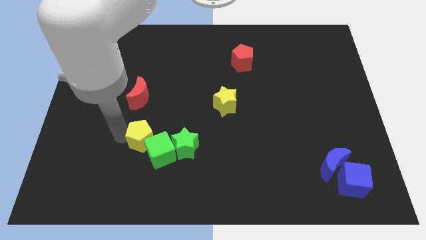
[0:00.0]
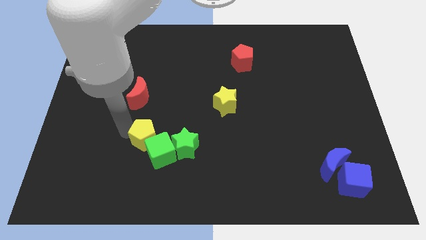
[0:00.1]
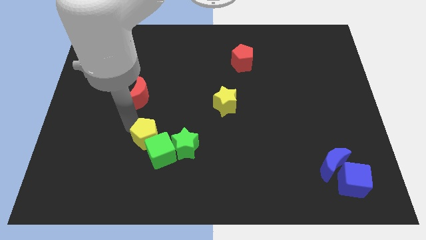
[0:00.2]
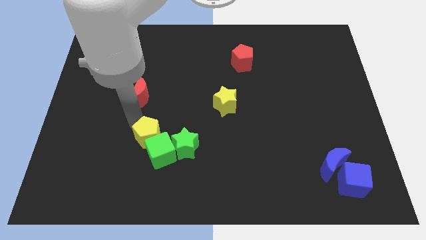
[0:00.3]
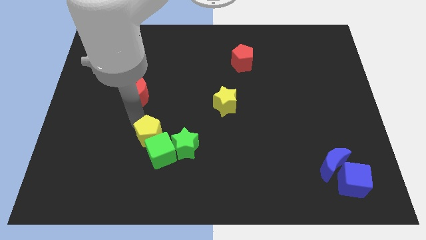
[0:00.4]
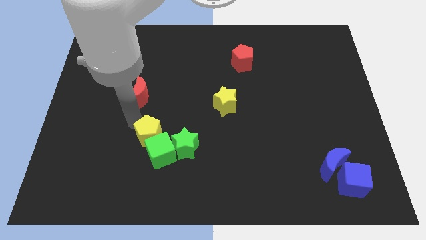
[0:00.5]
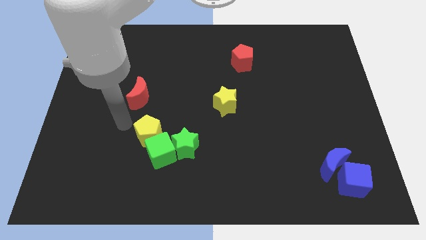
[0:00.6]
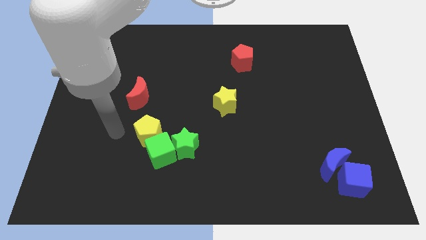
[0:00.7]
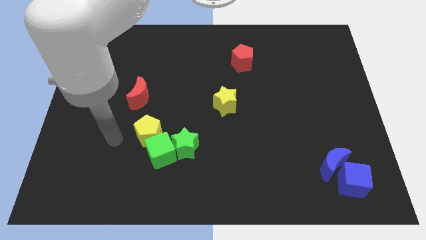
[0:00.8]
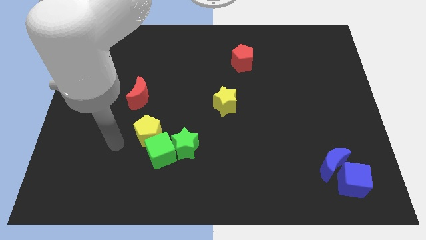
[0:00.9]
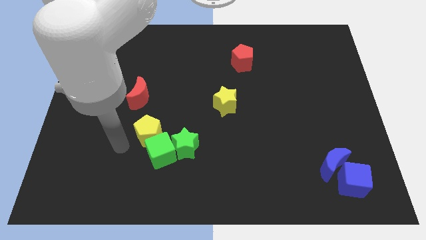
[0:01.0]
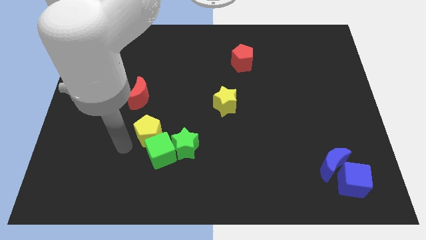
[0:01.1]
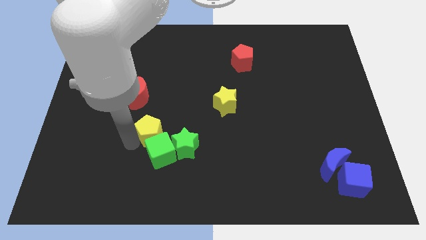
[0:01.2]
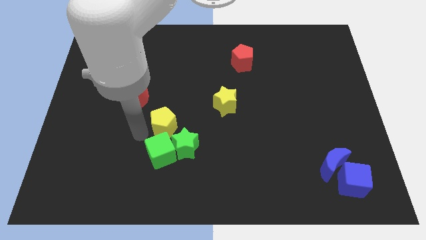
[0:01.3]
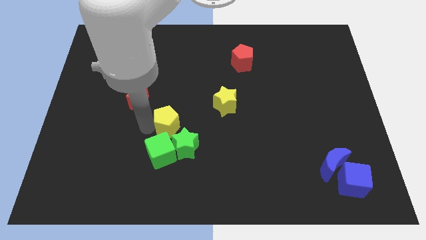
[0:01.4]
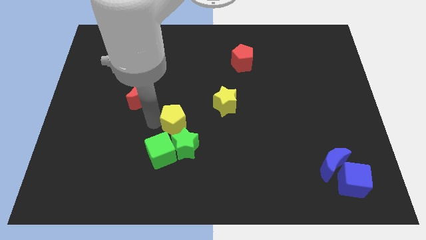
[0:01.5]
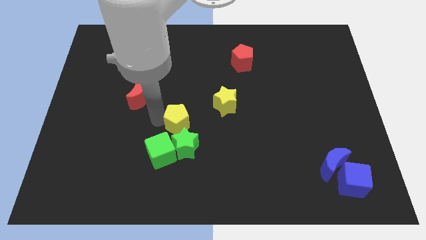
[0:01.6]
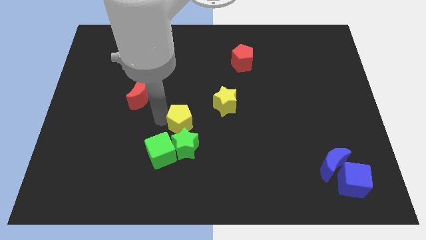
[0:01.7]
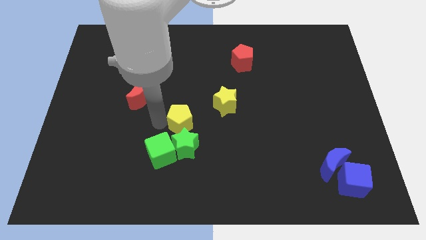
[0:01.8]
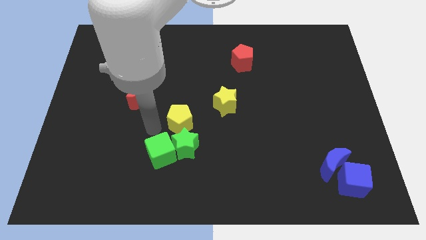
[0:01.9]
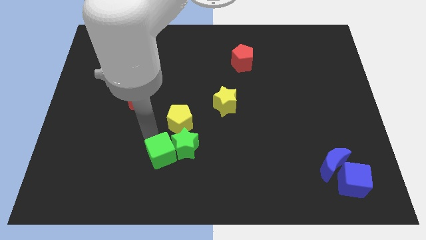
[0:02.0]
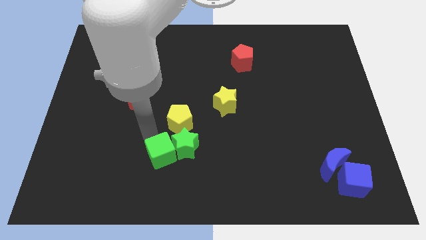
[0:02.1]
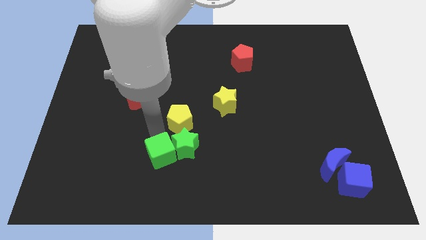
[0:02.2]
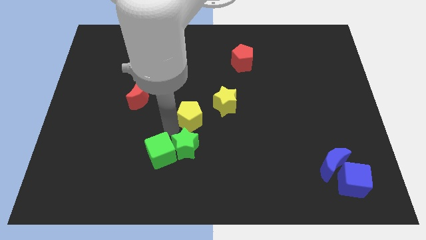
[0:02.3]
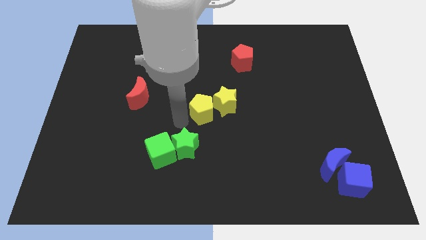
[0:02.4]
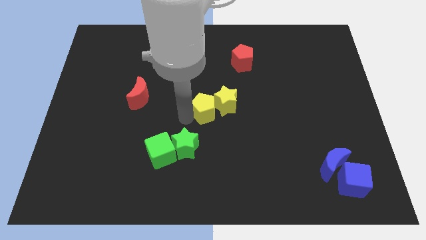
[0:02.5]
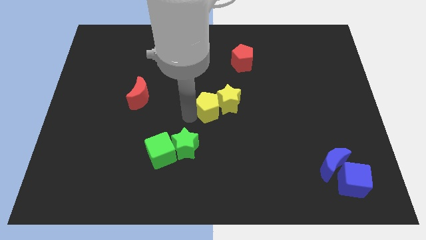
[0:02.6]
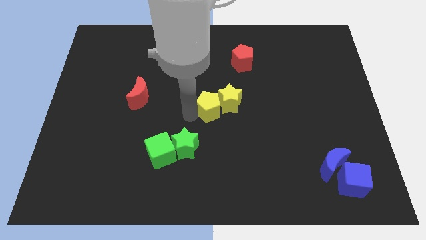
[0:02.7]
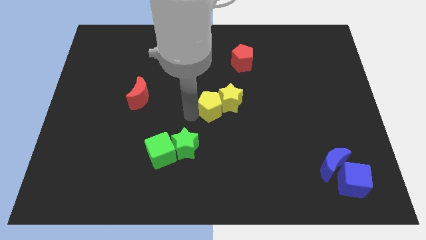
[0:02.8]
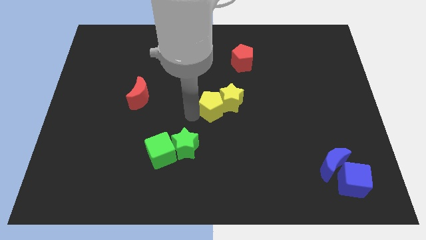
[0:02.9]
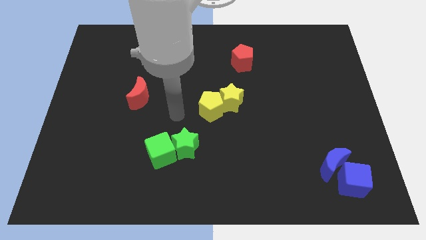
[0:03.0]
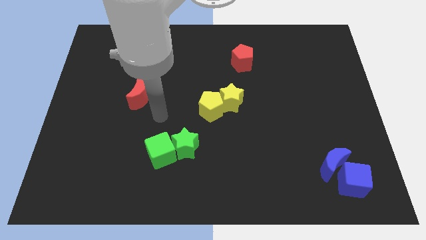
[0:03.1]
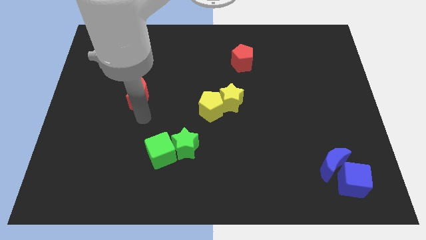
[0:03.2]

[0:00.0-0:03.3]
move the yellow pentagon into the yellow star

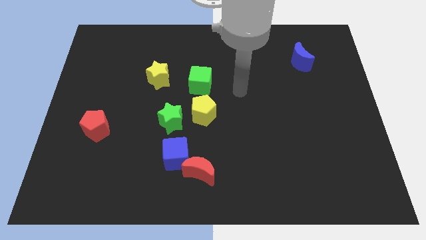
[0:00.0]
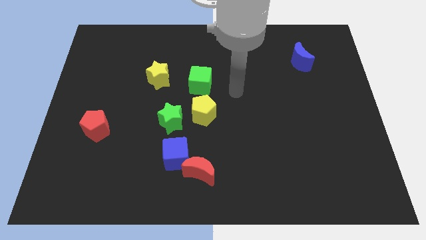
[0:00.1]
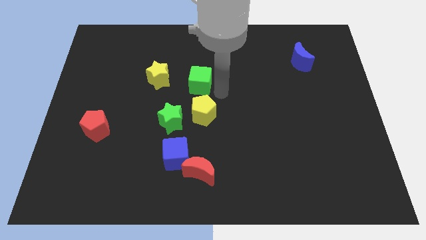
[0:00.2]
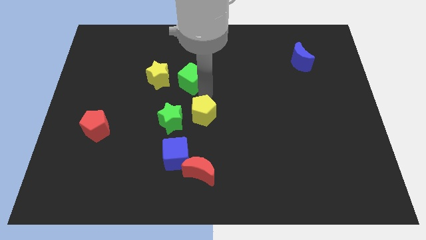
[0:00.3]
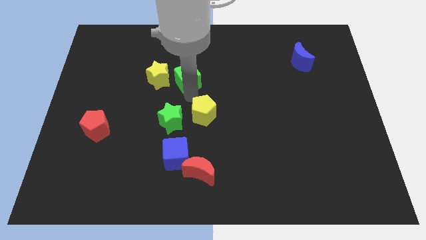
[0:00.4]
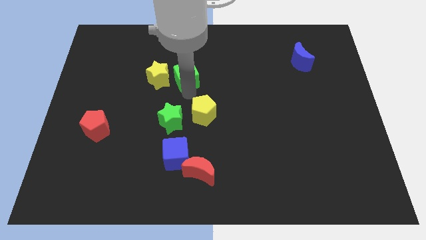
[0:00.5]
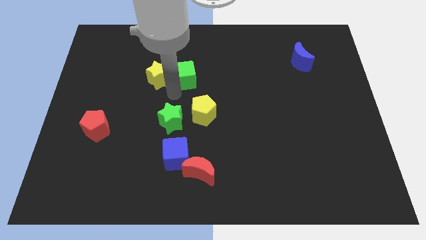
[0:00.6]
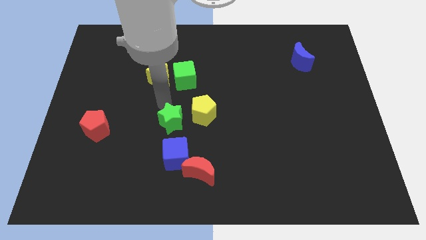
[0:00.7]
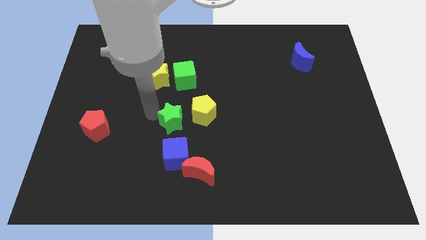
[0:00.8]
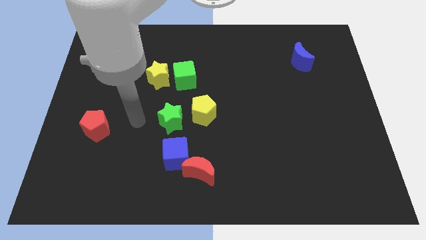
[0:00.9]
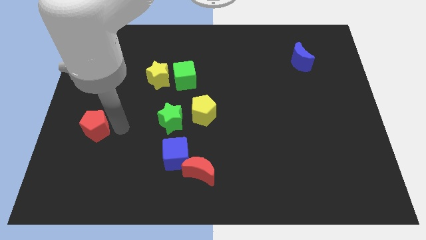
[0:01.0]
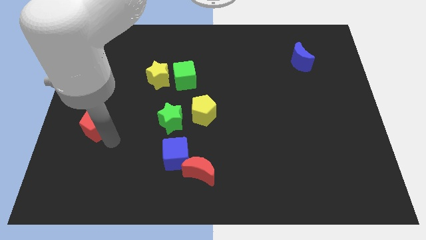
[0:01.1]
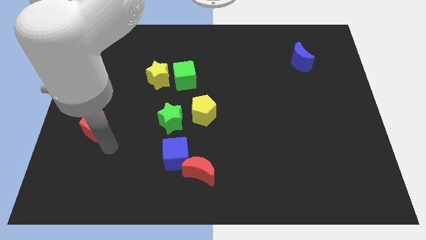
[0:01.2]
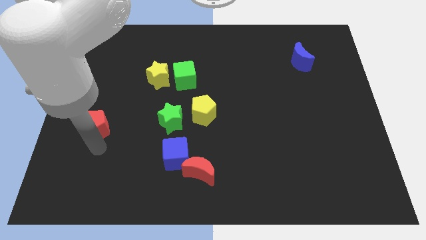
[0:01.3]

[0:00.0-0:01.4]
move your arm to the bottom of the red pentagon

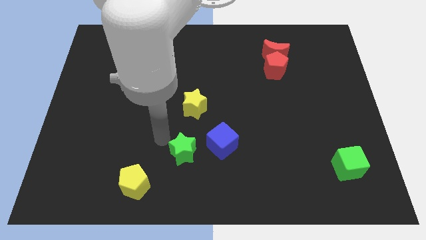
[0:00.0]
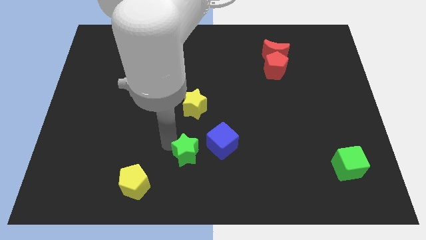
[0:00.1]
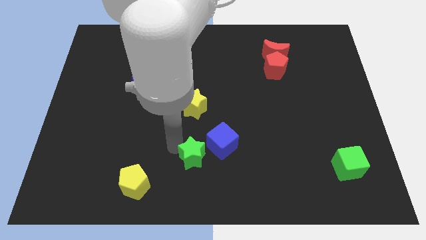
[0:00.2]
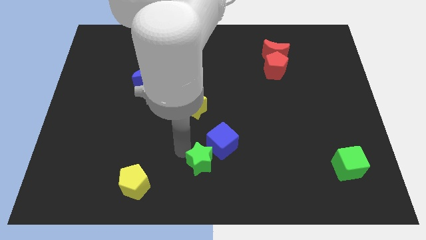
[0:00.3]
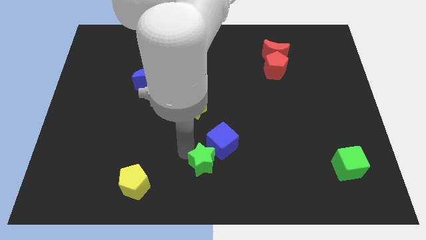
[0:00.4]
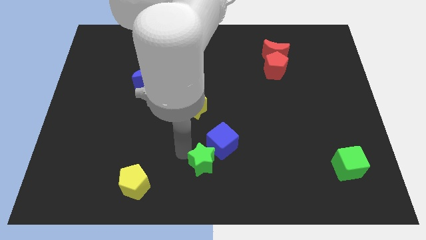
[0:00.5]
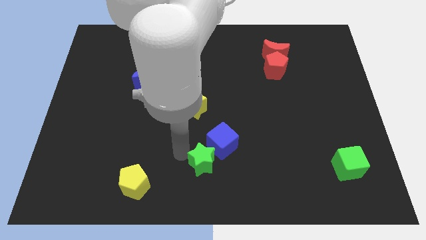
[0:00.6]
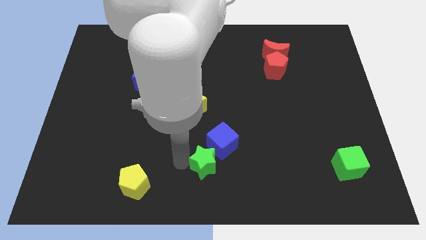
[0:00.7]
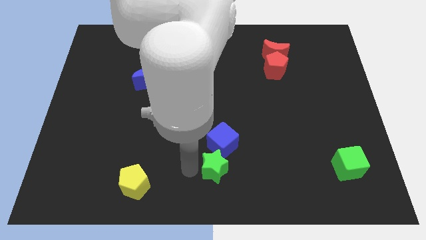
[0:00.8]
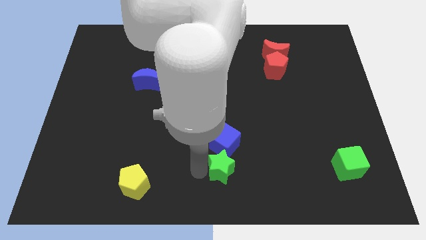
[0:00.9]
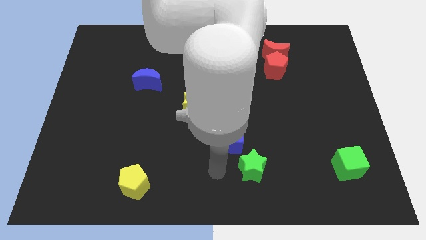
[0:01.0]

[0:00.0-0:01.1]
move the green star to the bottom right of the blue cube

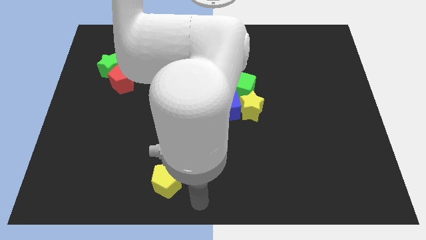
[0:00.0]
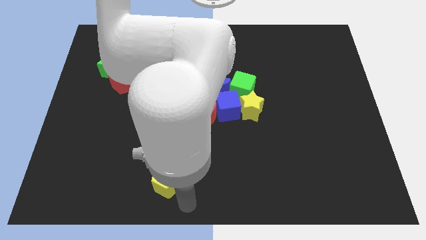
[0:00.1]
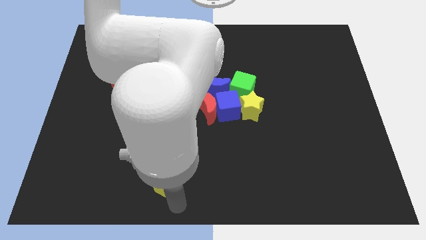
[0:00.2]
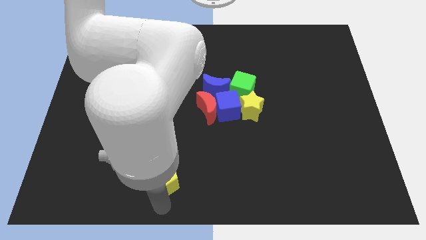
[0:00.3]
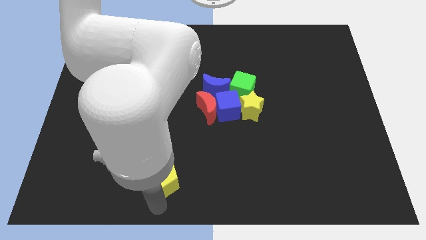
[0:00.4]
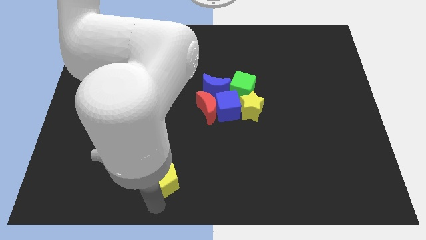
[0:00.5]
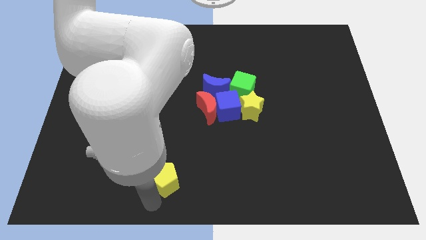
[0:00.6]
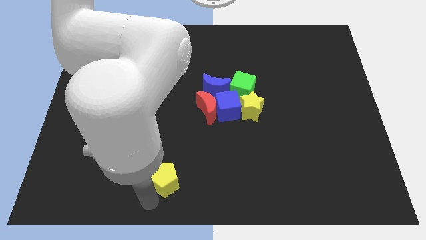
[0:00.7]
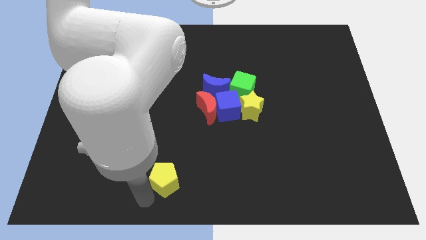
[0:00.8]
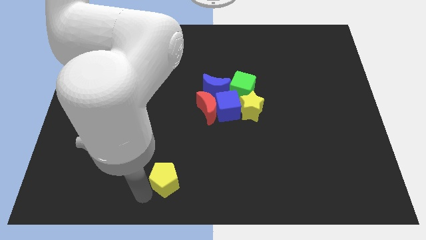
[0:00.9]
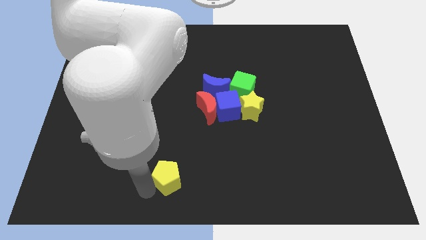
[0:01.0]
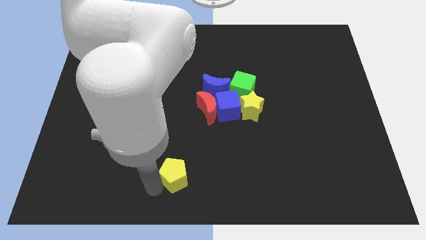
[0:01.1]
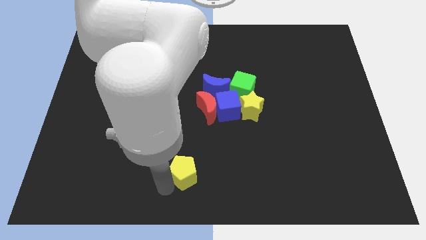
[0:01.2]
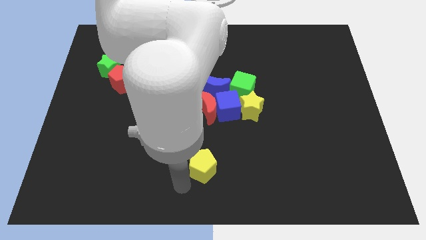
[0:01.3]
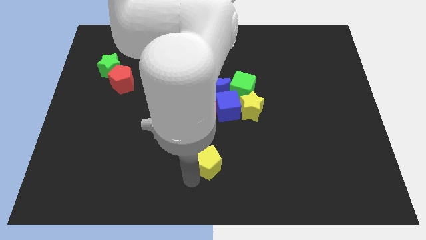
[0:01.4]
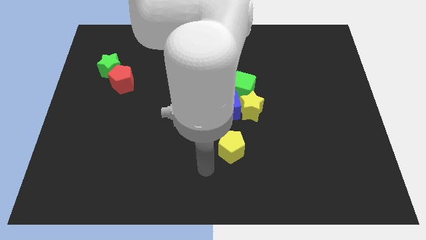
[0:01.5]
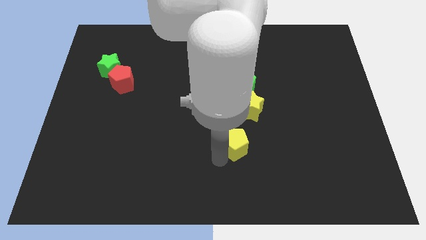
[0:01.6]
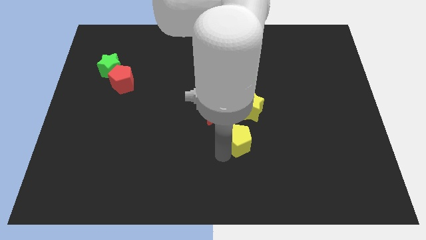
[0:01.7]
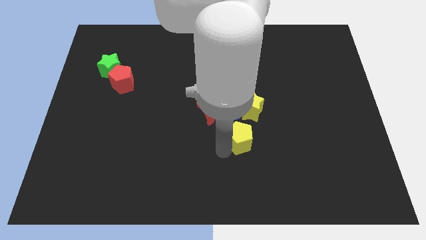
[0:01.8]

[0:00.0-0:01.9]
push the yellow pentagon towards a group of elements in the center of the board

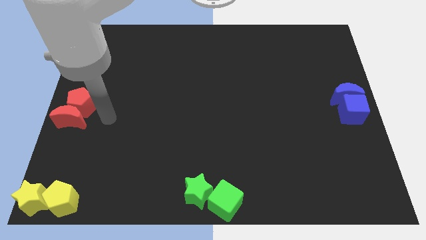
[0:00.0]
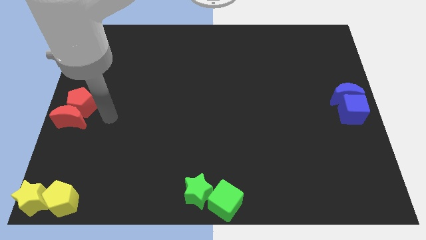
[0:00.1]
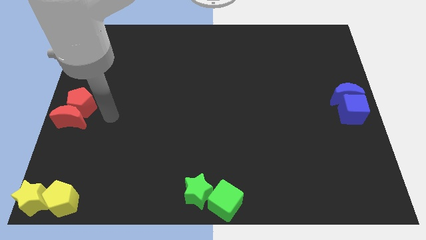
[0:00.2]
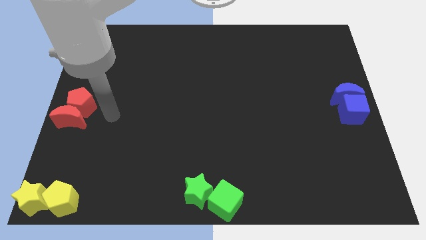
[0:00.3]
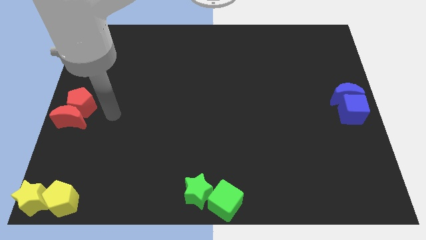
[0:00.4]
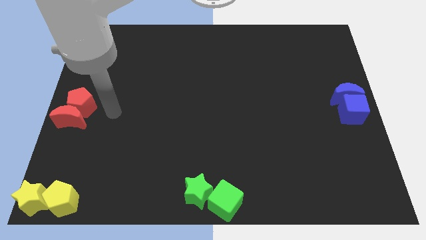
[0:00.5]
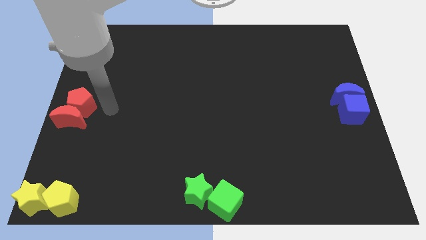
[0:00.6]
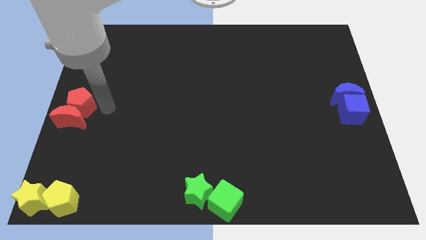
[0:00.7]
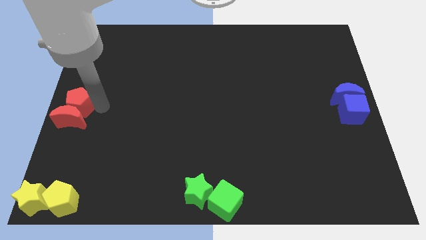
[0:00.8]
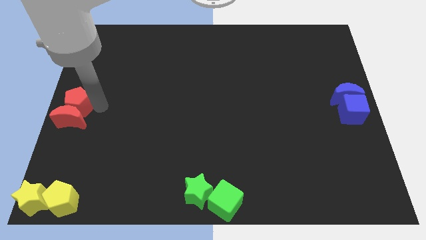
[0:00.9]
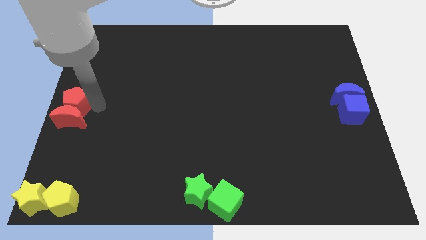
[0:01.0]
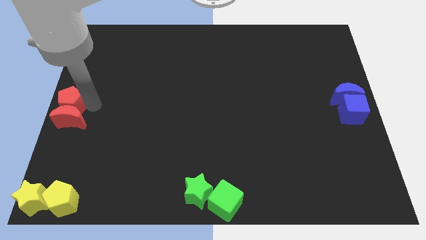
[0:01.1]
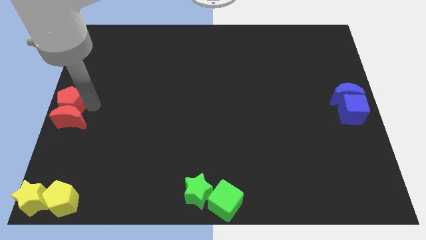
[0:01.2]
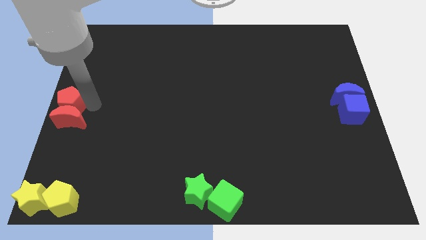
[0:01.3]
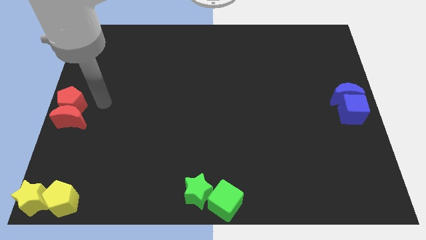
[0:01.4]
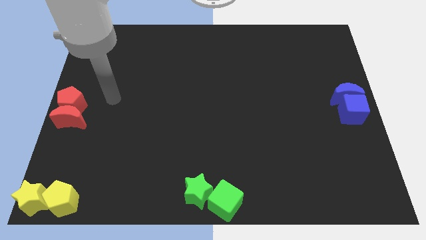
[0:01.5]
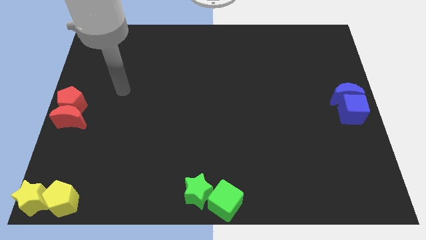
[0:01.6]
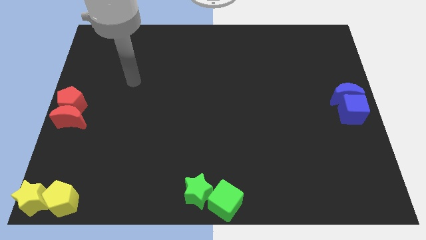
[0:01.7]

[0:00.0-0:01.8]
slightly push the red pentagon to the left centre of the board
